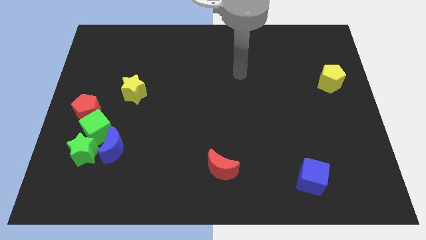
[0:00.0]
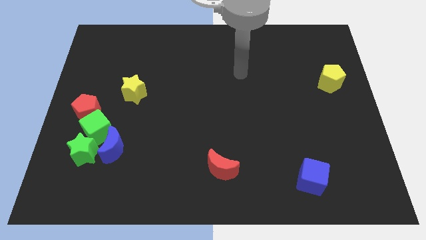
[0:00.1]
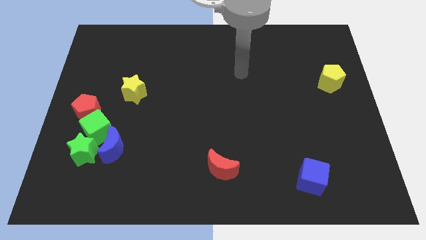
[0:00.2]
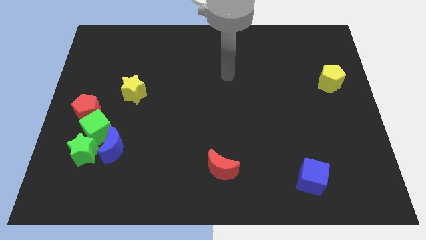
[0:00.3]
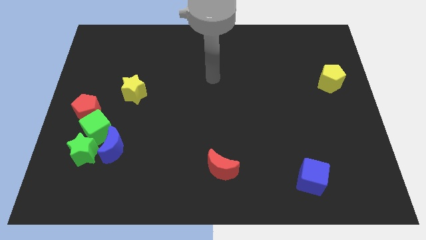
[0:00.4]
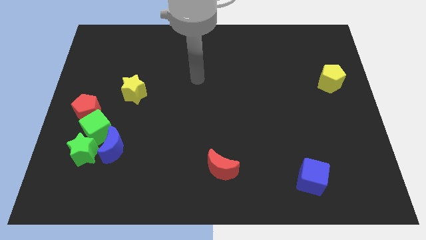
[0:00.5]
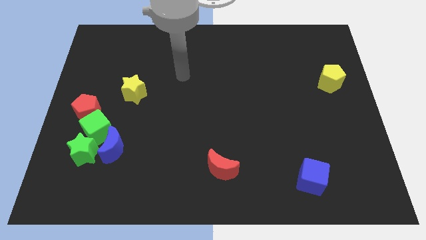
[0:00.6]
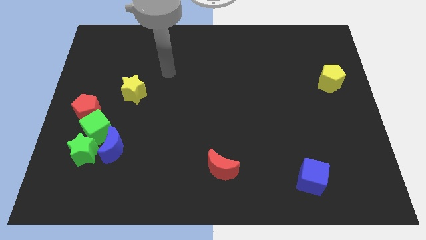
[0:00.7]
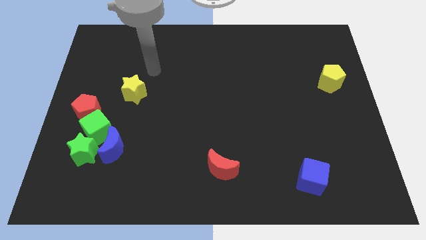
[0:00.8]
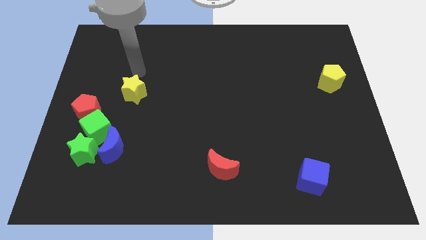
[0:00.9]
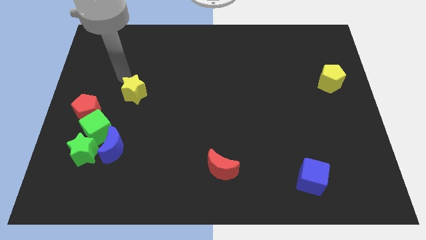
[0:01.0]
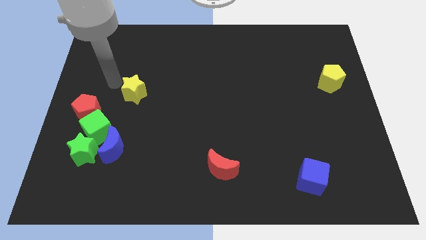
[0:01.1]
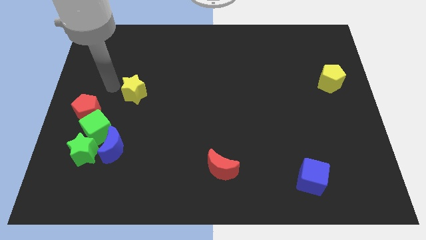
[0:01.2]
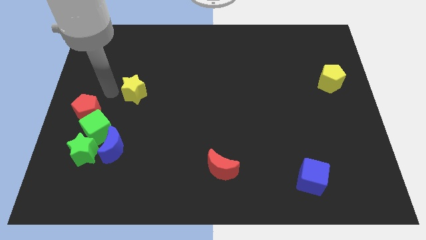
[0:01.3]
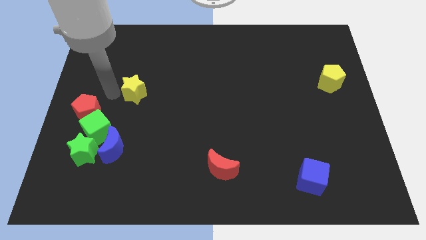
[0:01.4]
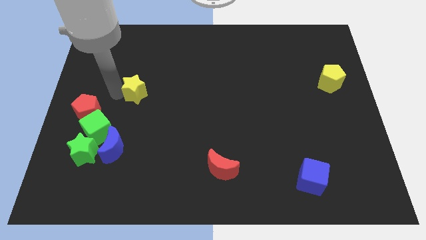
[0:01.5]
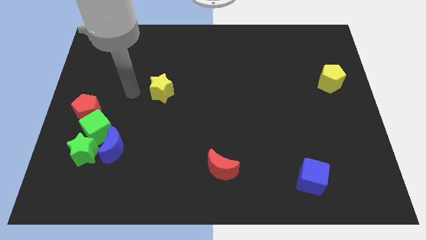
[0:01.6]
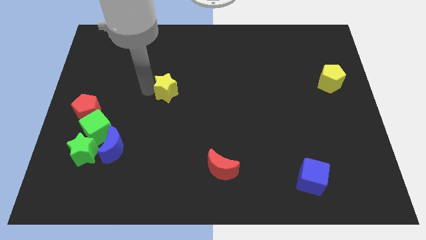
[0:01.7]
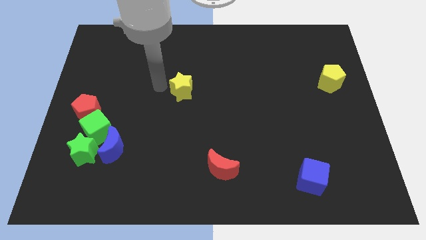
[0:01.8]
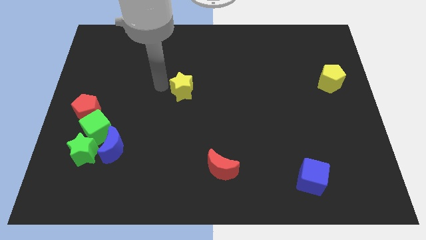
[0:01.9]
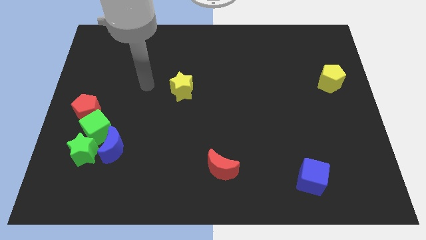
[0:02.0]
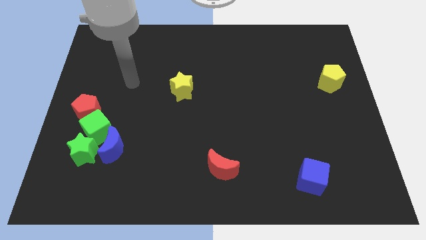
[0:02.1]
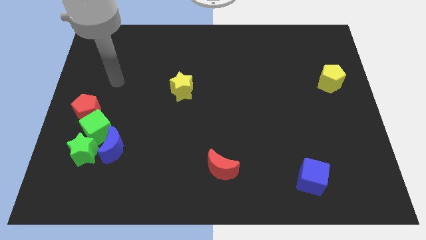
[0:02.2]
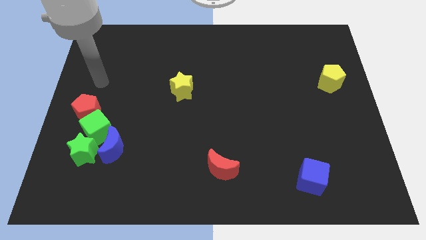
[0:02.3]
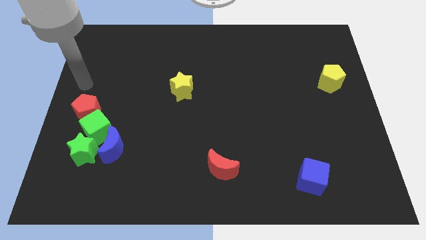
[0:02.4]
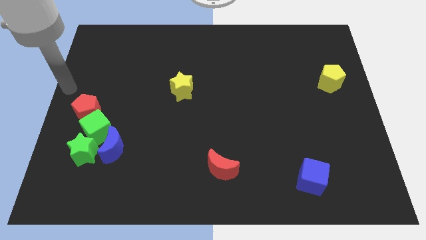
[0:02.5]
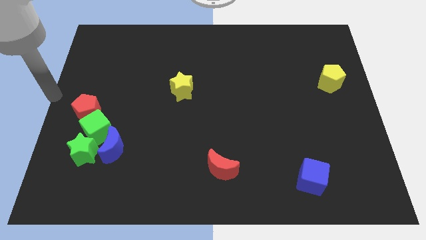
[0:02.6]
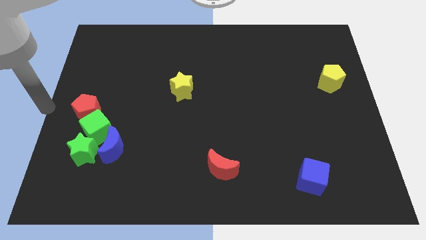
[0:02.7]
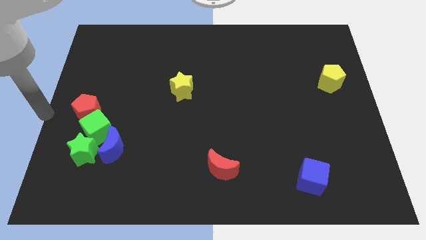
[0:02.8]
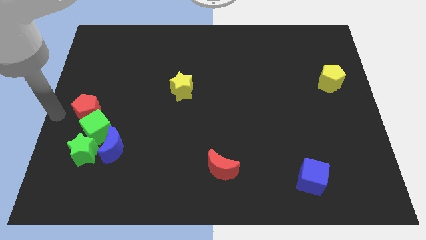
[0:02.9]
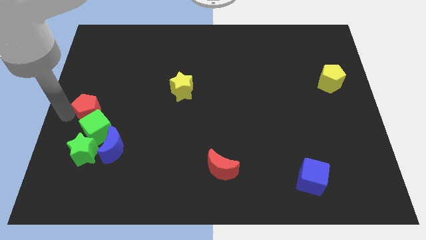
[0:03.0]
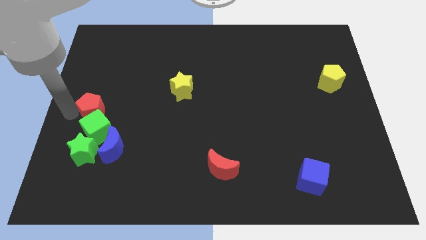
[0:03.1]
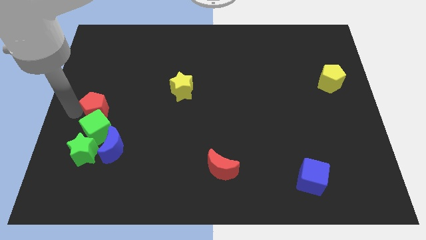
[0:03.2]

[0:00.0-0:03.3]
slide the yellow star to the center of the board

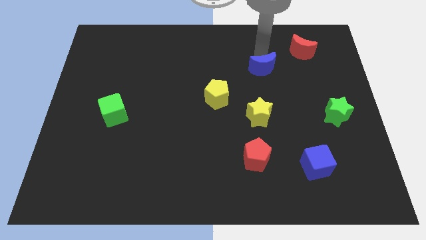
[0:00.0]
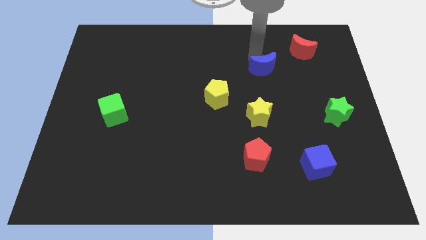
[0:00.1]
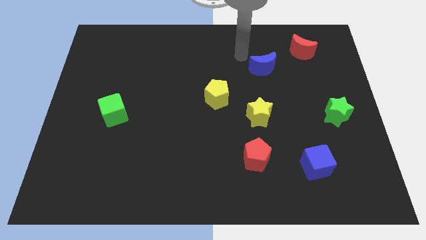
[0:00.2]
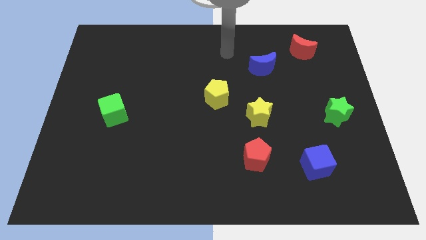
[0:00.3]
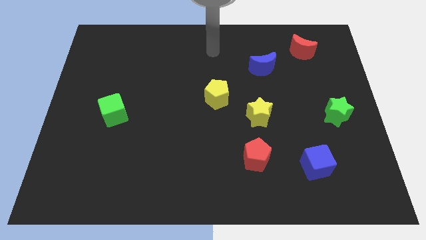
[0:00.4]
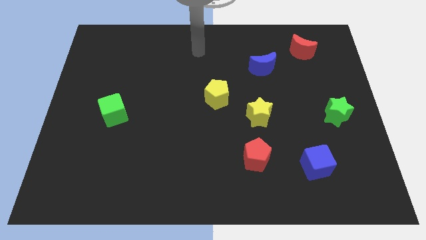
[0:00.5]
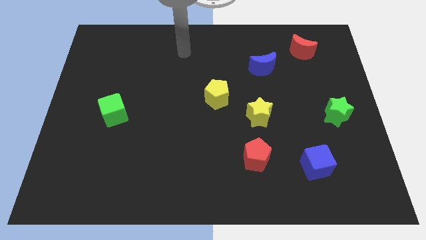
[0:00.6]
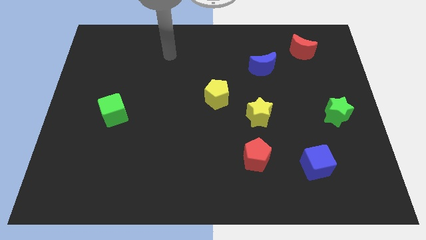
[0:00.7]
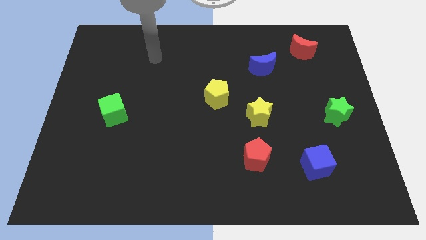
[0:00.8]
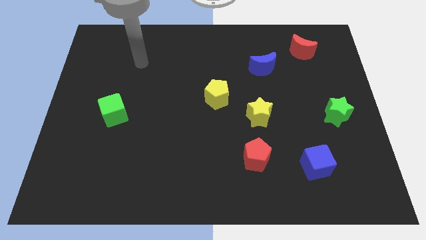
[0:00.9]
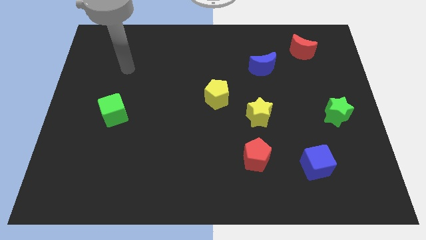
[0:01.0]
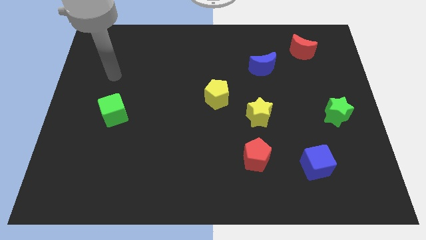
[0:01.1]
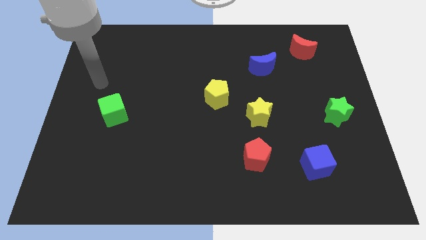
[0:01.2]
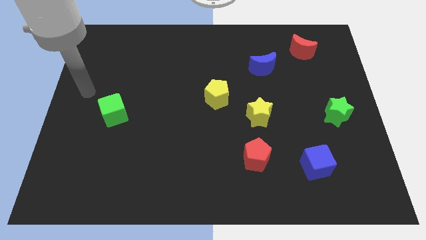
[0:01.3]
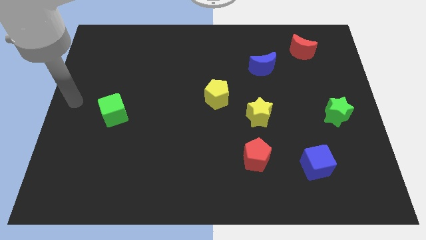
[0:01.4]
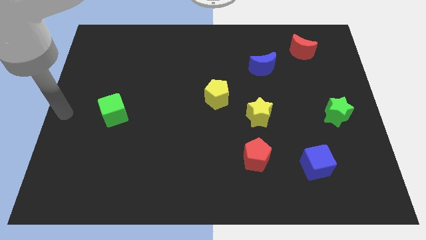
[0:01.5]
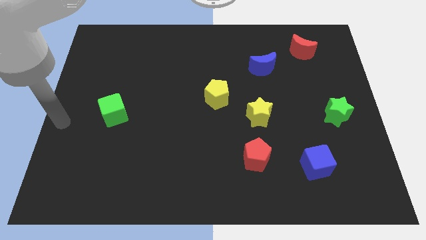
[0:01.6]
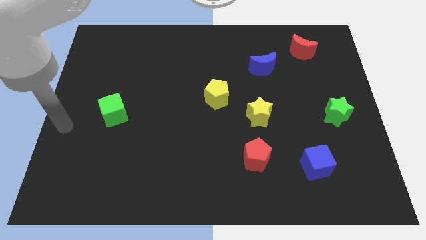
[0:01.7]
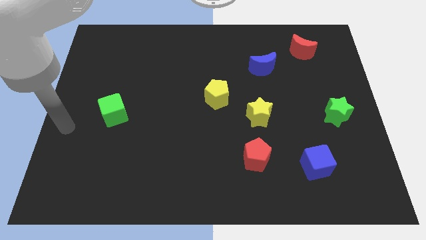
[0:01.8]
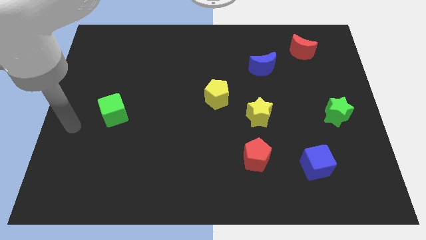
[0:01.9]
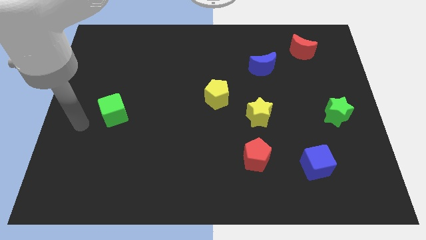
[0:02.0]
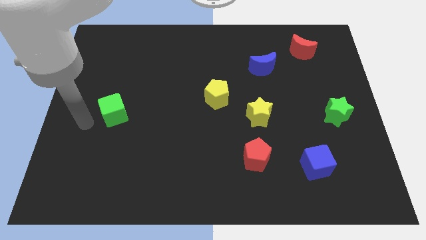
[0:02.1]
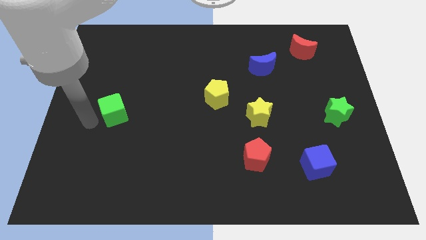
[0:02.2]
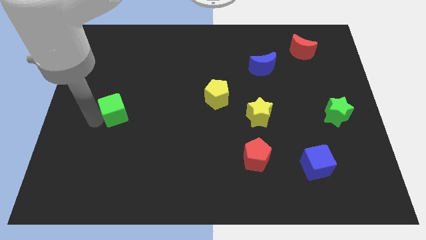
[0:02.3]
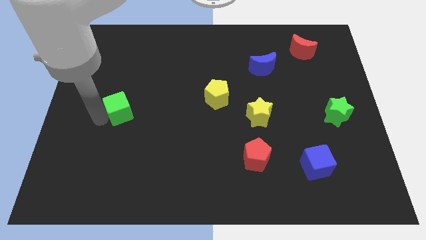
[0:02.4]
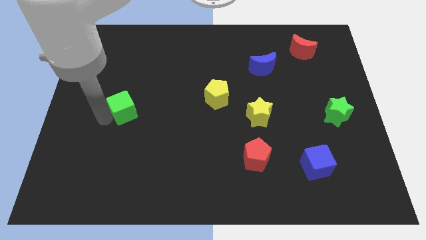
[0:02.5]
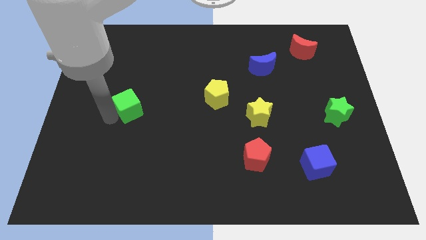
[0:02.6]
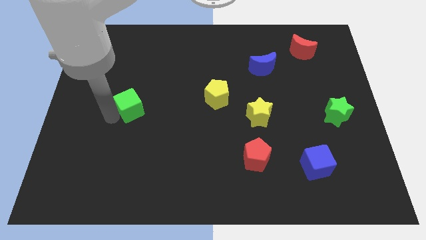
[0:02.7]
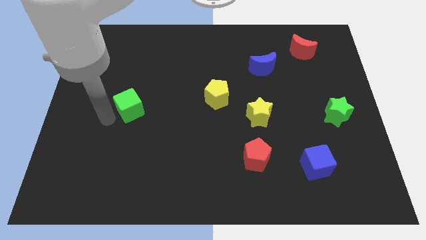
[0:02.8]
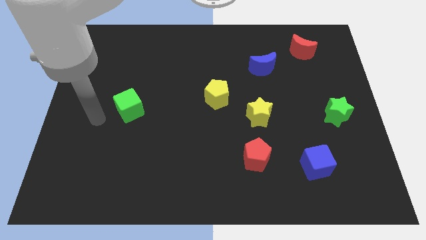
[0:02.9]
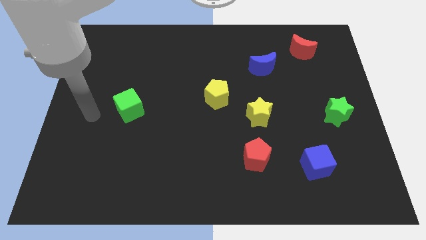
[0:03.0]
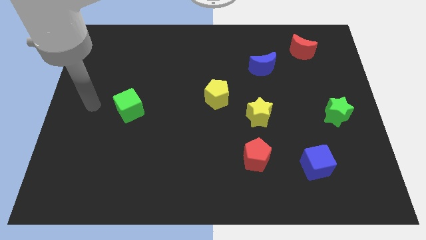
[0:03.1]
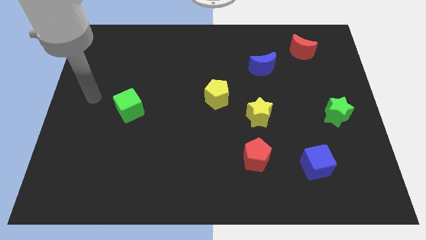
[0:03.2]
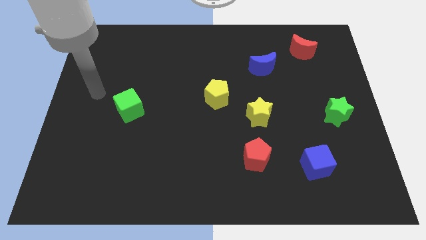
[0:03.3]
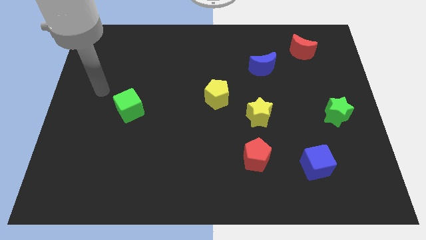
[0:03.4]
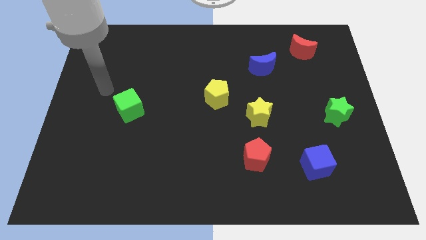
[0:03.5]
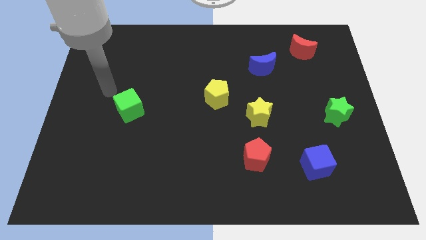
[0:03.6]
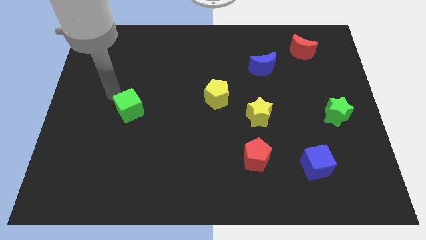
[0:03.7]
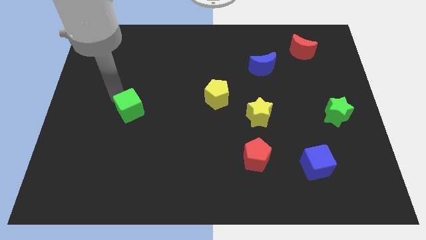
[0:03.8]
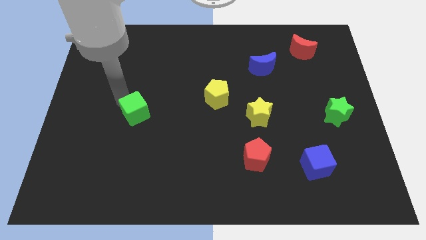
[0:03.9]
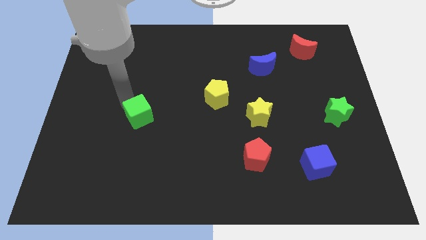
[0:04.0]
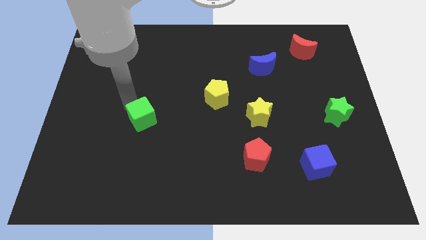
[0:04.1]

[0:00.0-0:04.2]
move the green cube slightly to the right of the board

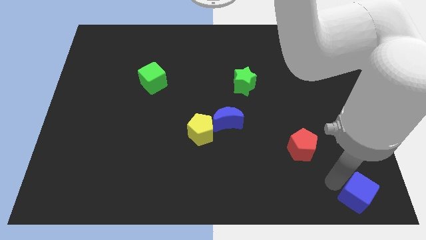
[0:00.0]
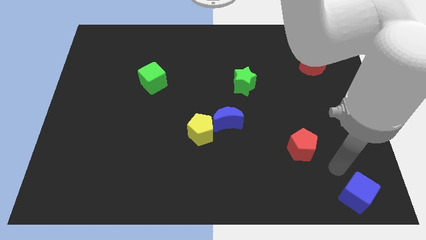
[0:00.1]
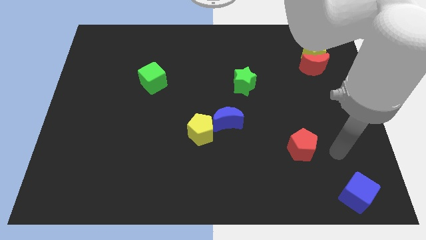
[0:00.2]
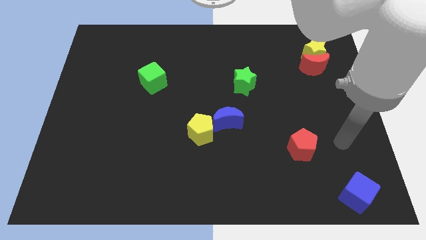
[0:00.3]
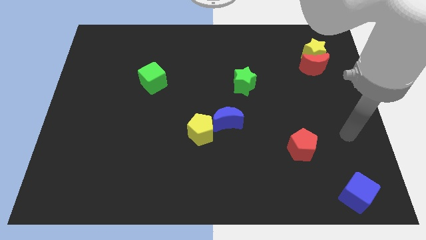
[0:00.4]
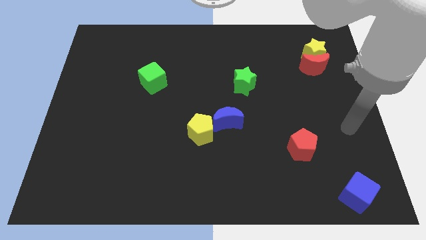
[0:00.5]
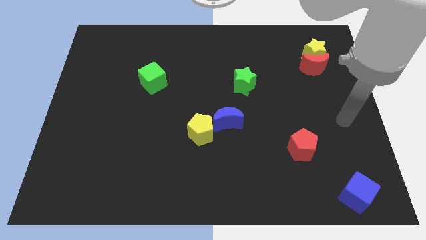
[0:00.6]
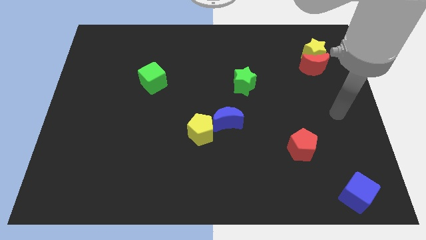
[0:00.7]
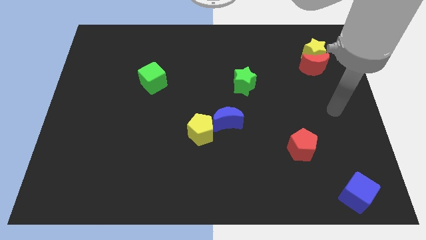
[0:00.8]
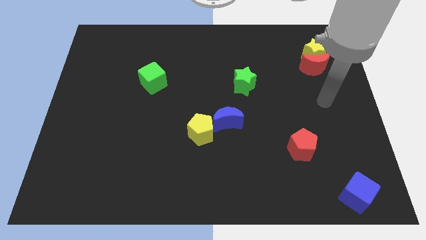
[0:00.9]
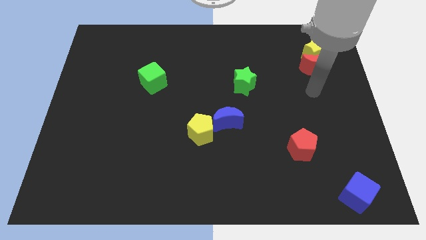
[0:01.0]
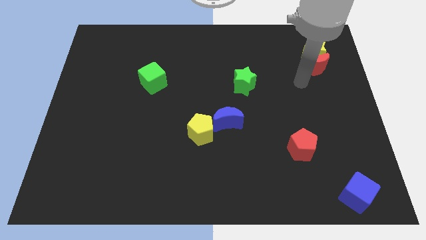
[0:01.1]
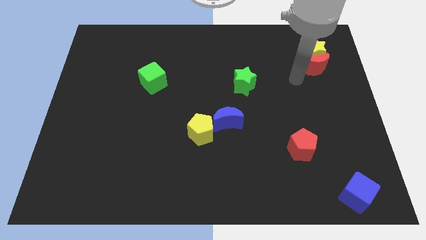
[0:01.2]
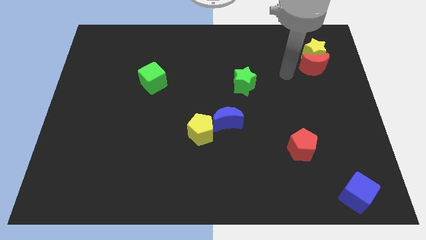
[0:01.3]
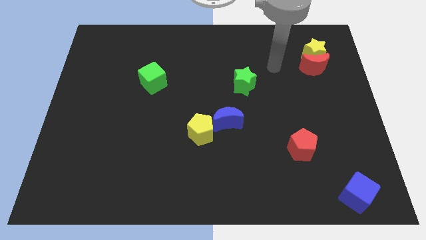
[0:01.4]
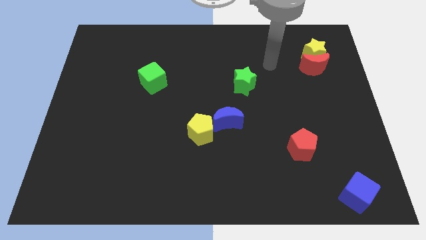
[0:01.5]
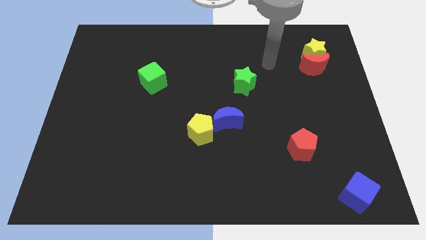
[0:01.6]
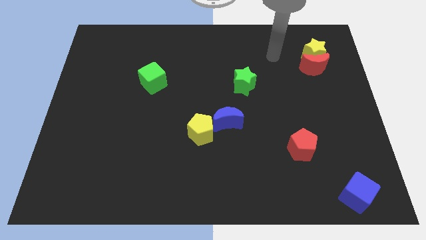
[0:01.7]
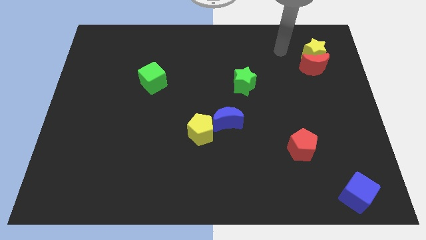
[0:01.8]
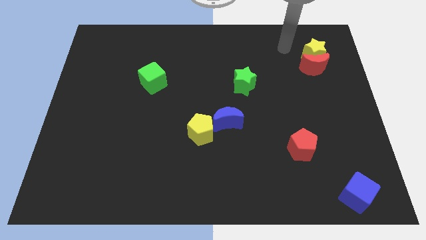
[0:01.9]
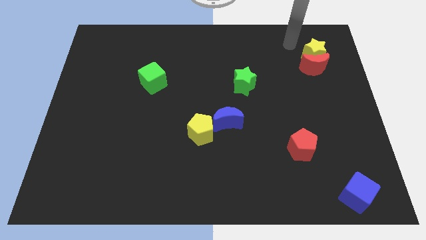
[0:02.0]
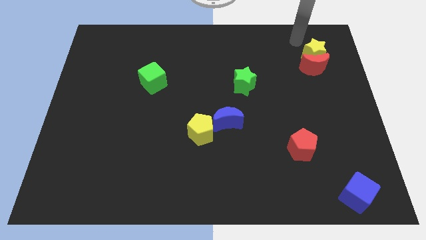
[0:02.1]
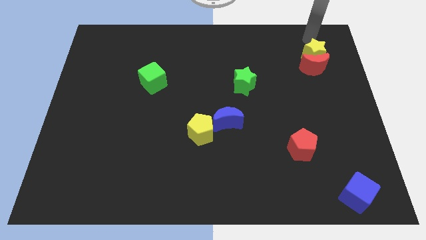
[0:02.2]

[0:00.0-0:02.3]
move your arm away from the blue cube
